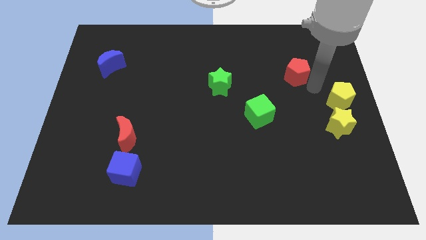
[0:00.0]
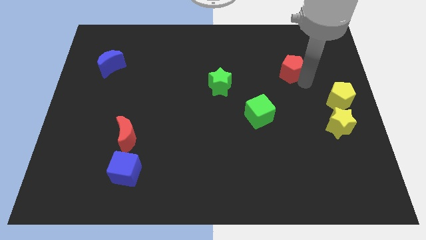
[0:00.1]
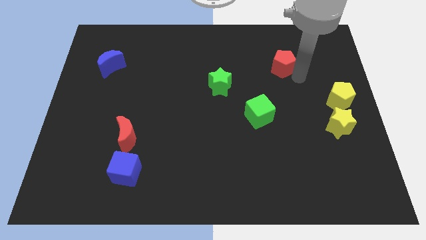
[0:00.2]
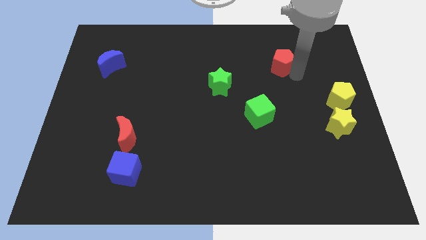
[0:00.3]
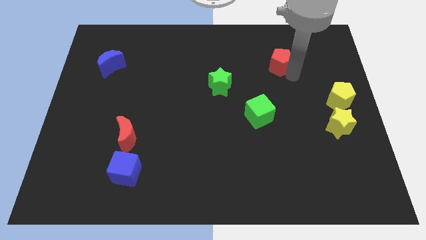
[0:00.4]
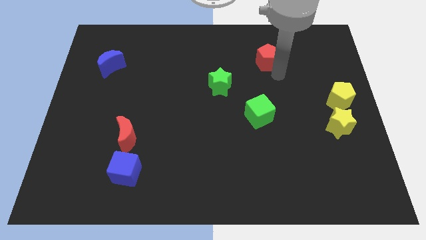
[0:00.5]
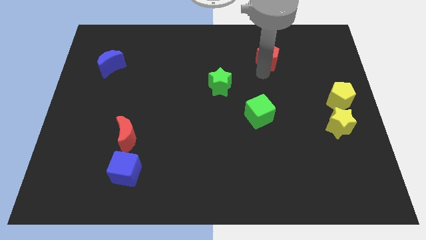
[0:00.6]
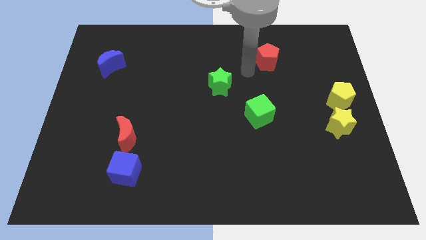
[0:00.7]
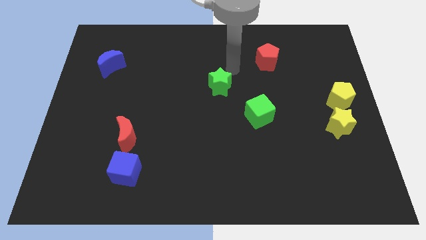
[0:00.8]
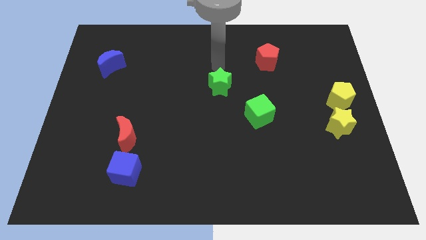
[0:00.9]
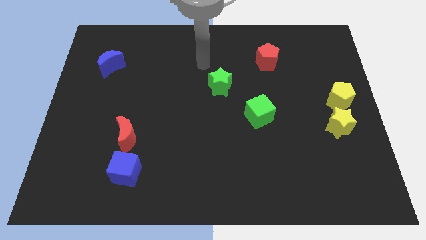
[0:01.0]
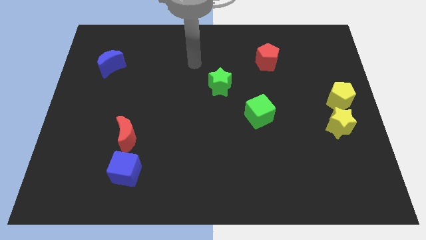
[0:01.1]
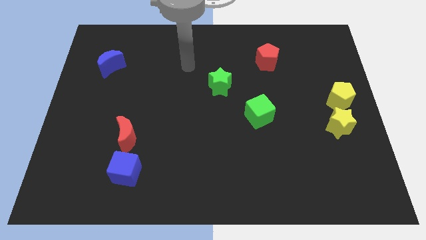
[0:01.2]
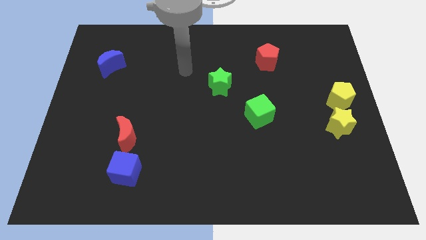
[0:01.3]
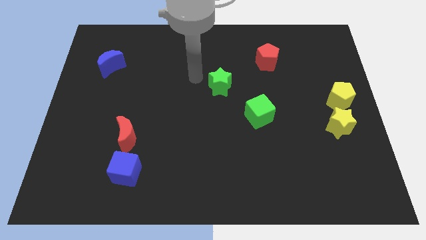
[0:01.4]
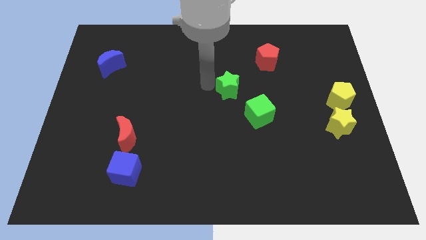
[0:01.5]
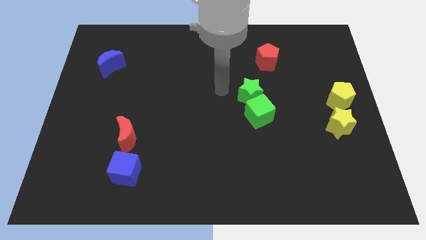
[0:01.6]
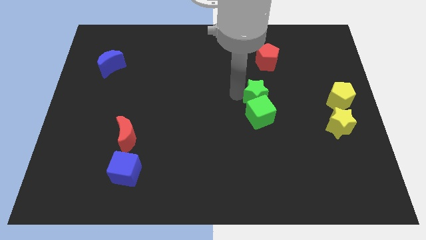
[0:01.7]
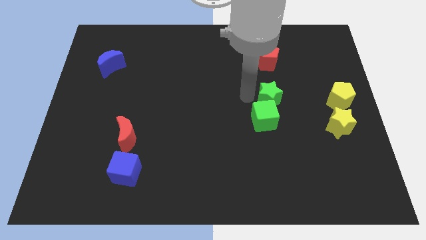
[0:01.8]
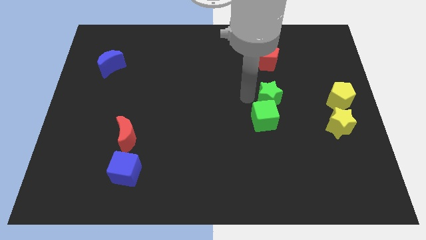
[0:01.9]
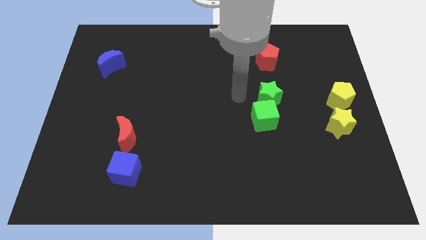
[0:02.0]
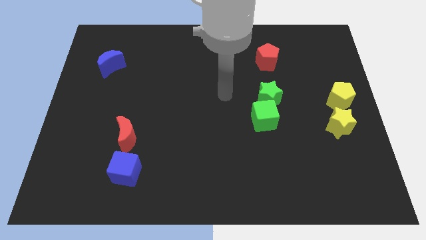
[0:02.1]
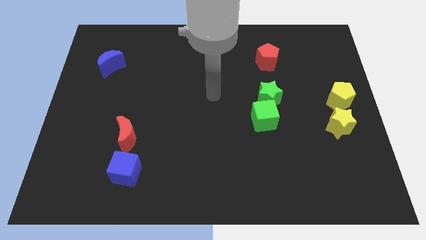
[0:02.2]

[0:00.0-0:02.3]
place the red pentagon on top of the green star

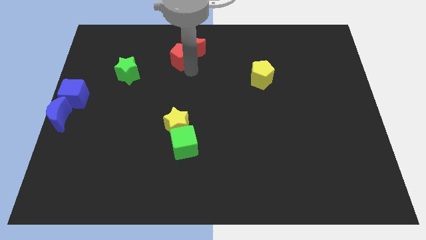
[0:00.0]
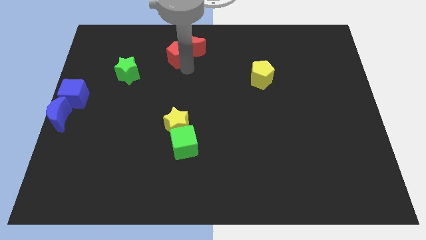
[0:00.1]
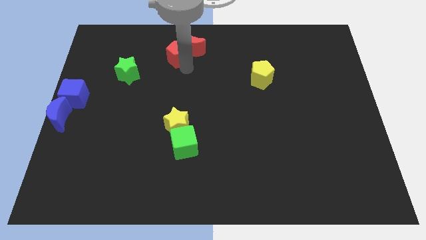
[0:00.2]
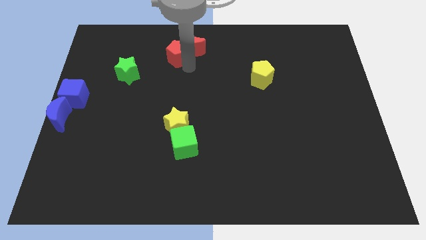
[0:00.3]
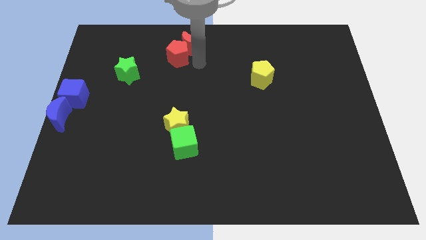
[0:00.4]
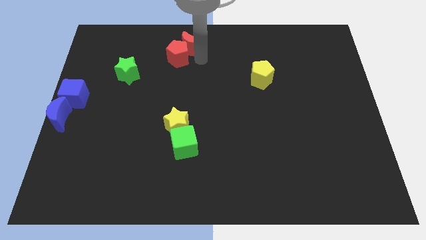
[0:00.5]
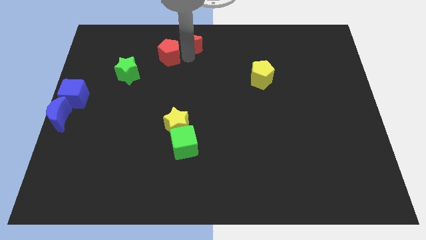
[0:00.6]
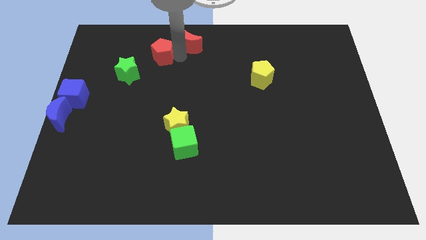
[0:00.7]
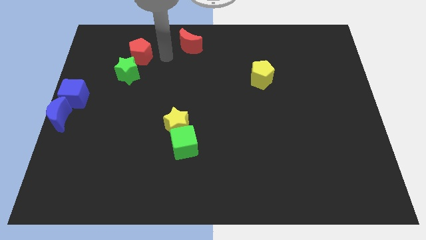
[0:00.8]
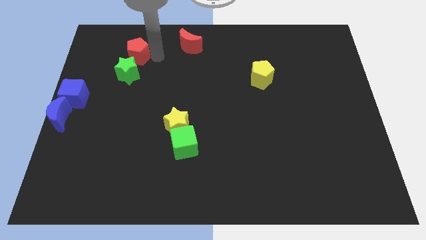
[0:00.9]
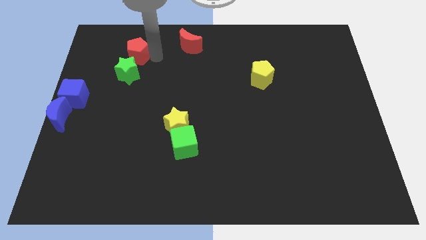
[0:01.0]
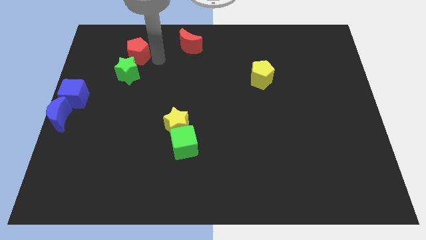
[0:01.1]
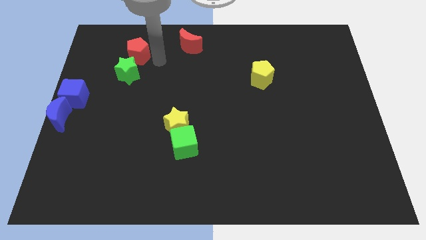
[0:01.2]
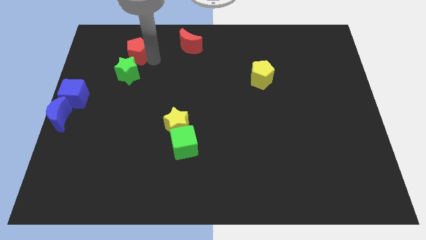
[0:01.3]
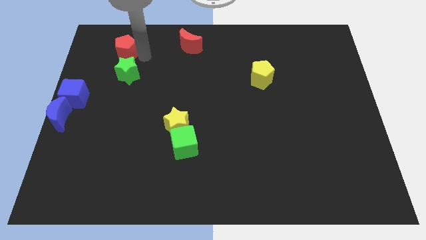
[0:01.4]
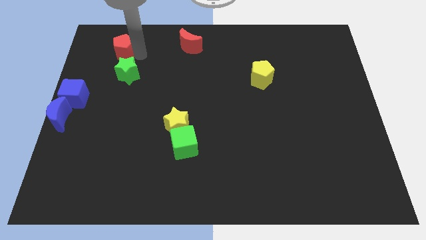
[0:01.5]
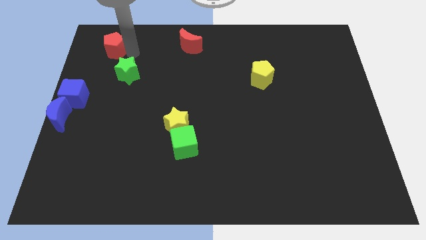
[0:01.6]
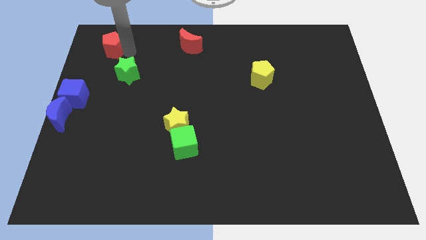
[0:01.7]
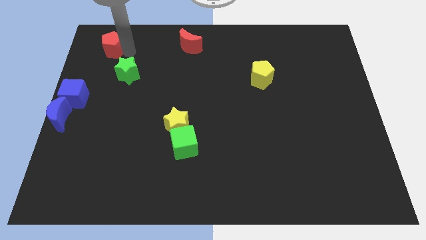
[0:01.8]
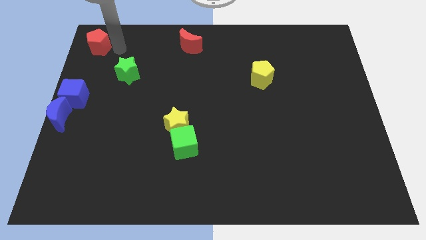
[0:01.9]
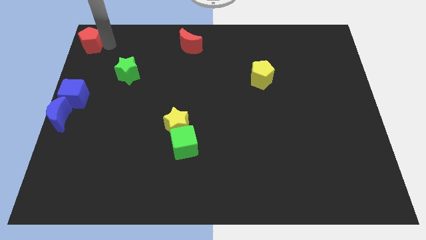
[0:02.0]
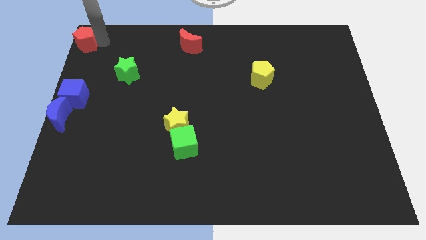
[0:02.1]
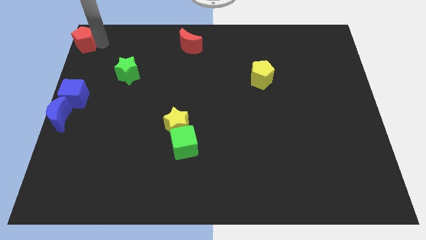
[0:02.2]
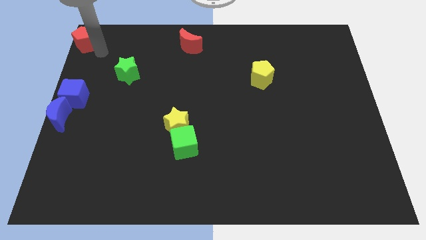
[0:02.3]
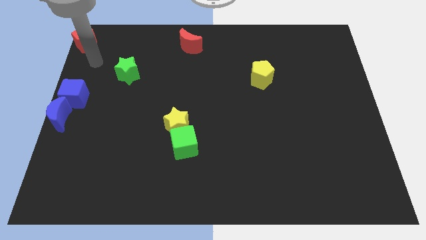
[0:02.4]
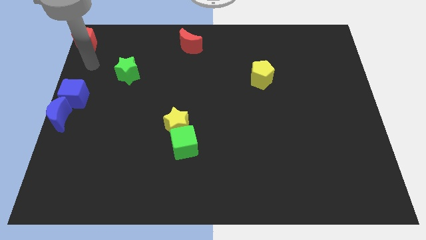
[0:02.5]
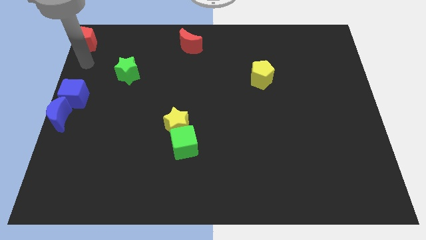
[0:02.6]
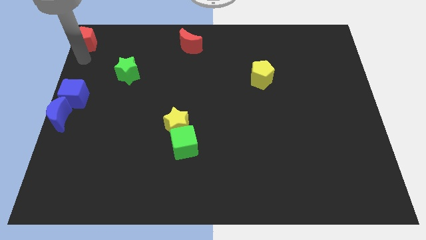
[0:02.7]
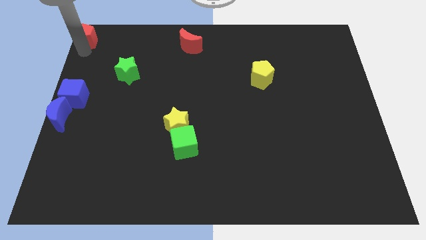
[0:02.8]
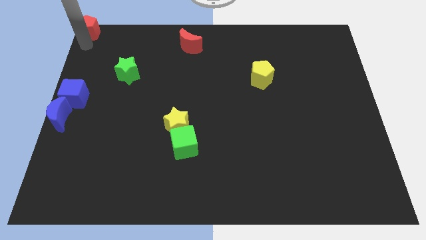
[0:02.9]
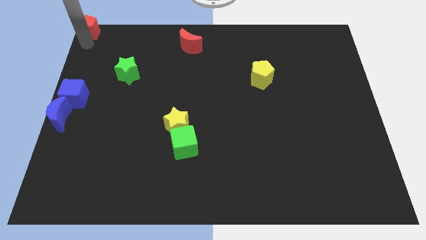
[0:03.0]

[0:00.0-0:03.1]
separate red pentagon from red crescent

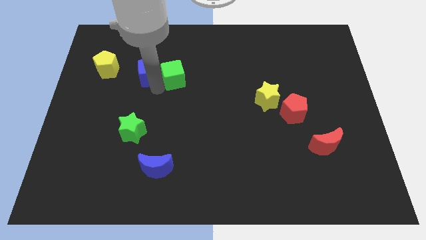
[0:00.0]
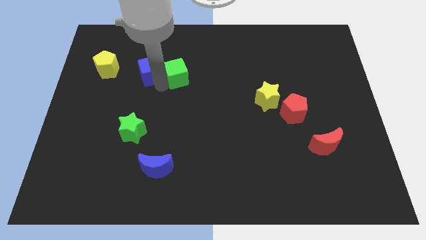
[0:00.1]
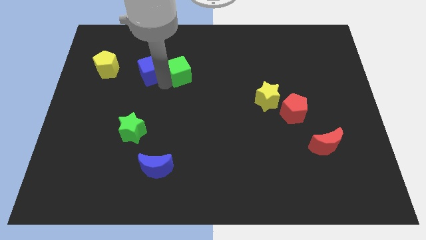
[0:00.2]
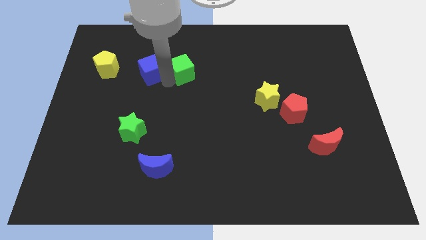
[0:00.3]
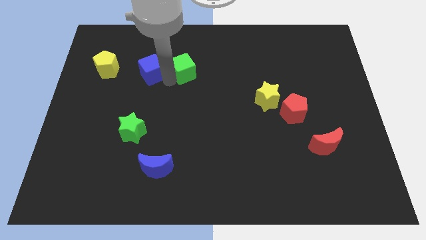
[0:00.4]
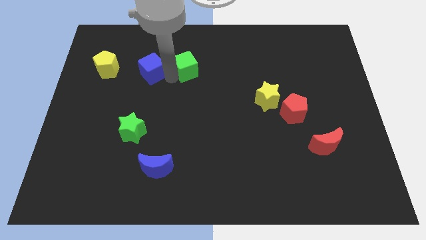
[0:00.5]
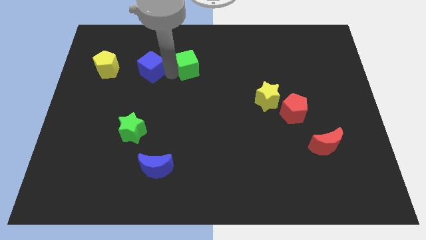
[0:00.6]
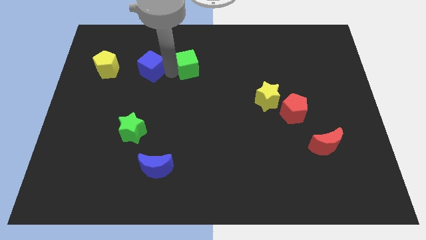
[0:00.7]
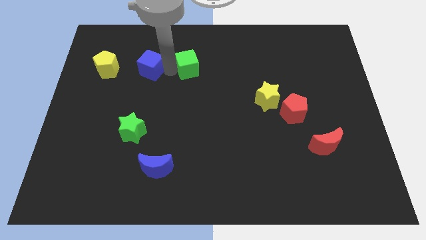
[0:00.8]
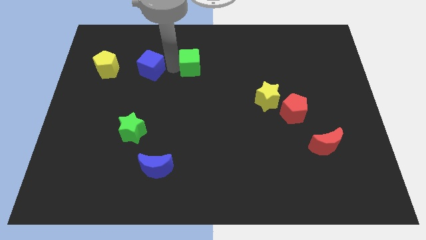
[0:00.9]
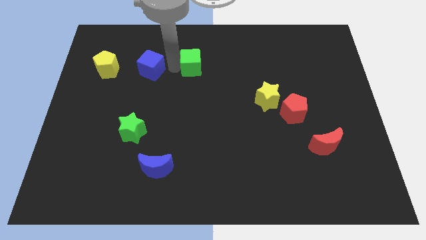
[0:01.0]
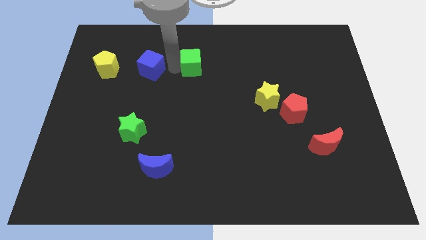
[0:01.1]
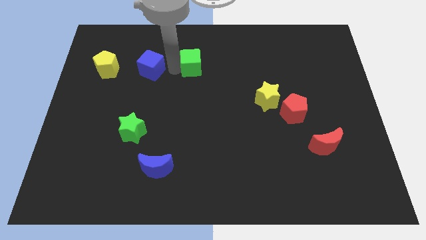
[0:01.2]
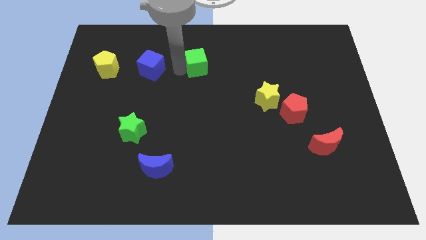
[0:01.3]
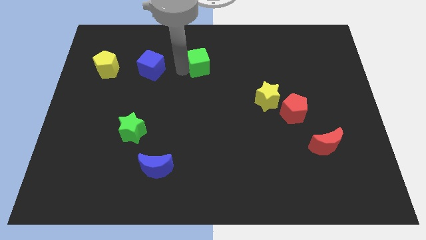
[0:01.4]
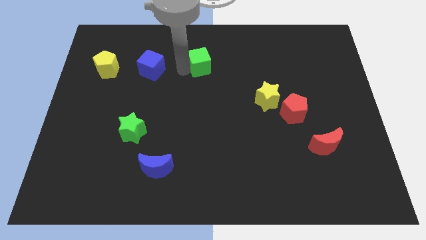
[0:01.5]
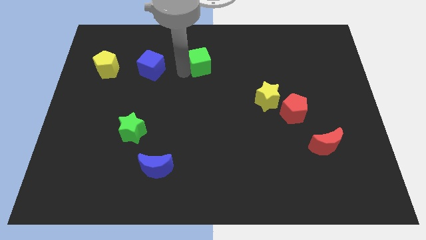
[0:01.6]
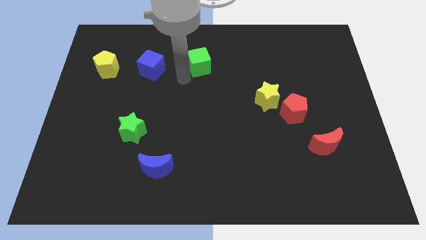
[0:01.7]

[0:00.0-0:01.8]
separate green cube from blue cube

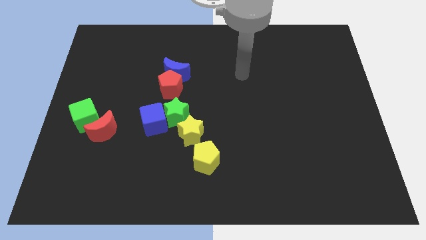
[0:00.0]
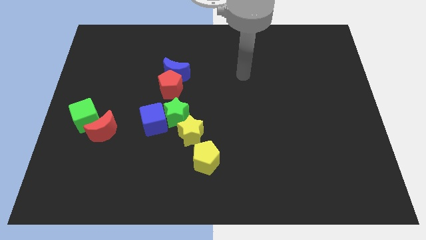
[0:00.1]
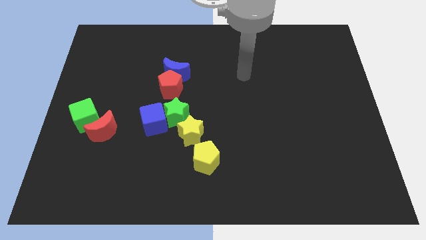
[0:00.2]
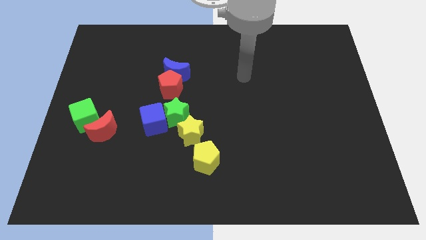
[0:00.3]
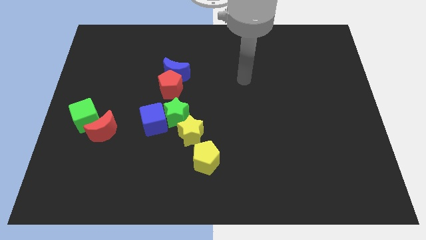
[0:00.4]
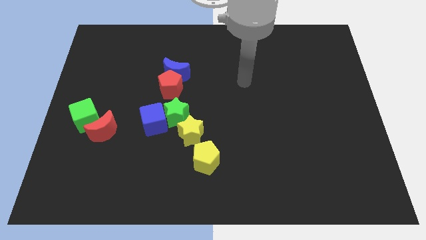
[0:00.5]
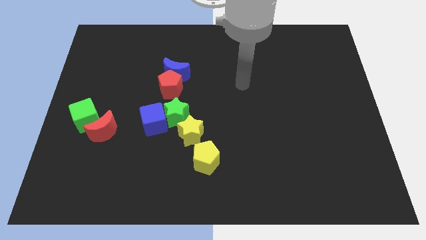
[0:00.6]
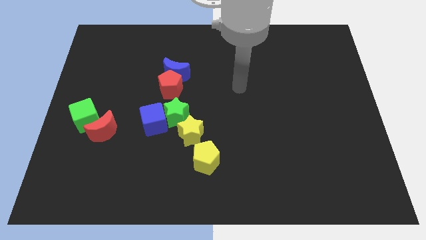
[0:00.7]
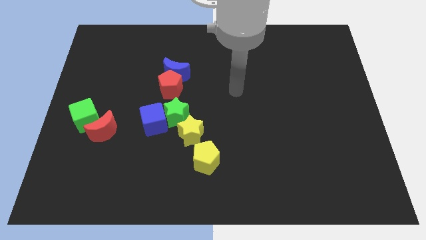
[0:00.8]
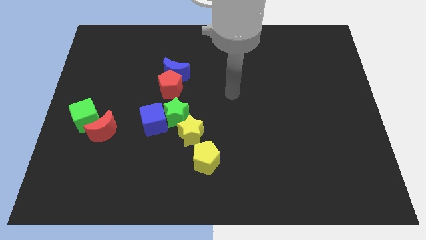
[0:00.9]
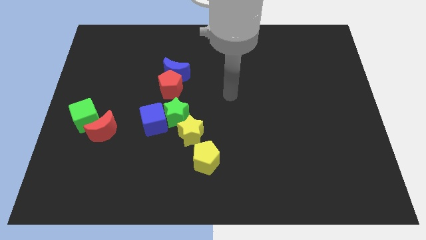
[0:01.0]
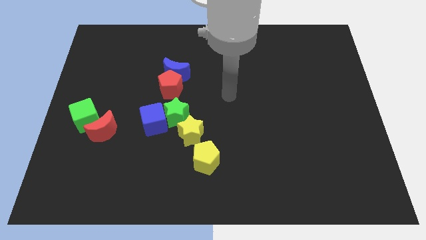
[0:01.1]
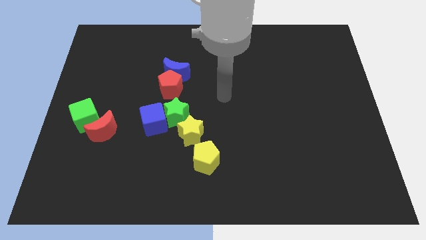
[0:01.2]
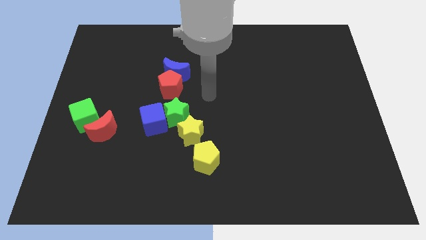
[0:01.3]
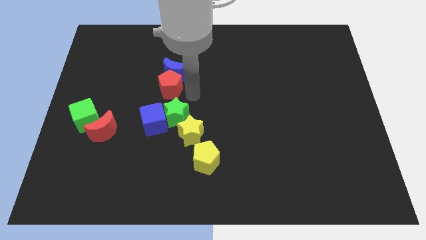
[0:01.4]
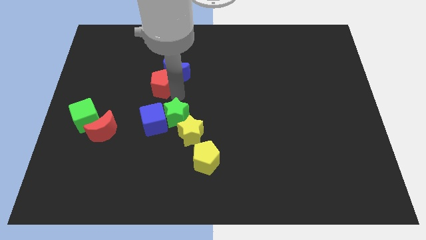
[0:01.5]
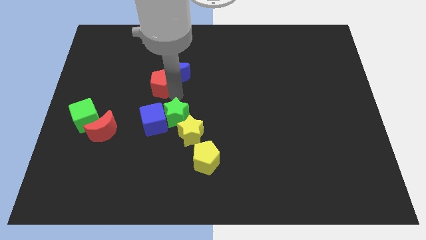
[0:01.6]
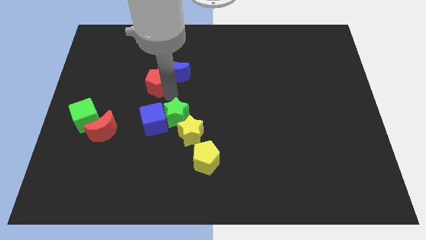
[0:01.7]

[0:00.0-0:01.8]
move the red pentagon to the bottom left side of the blue crescent
